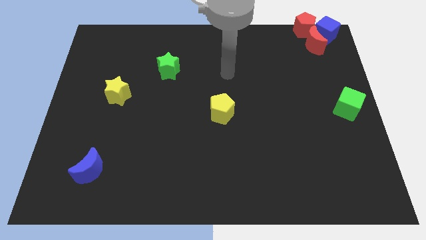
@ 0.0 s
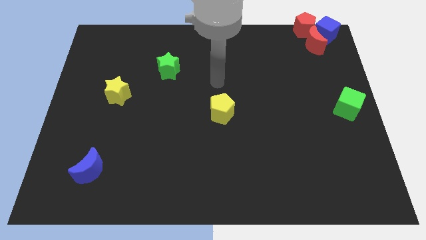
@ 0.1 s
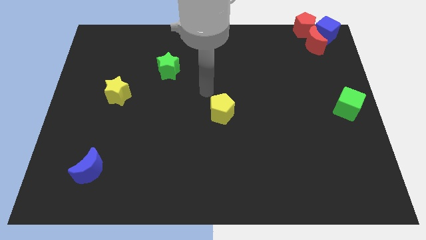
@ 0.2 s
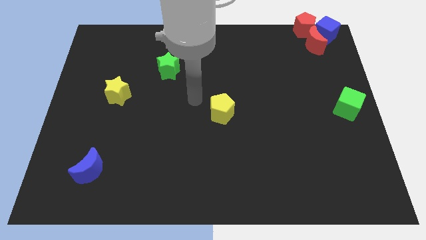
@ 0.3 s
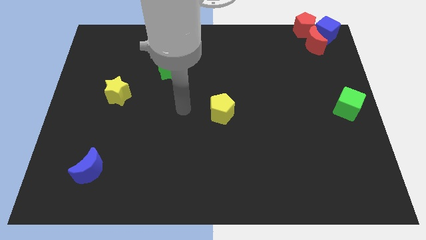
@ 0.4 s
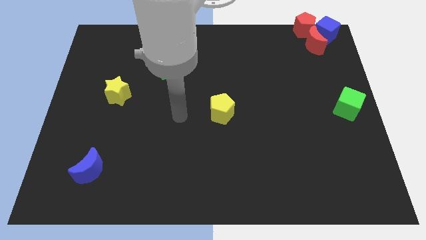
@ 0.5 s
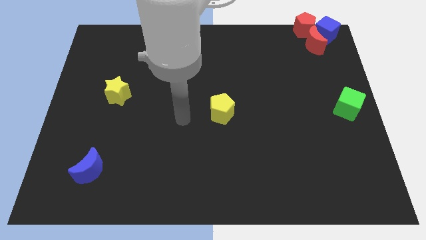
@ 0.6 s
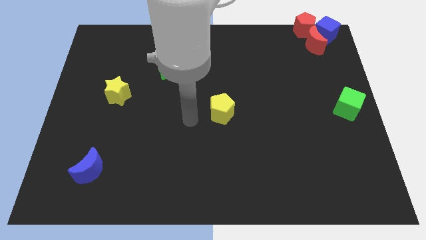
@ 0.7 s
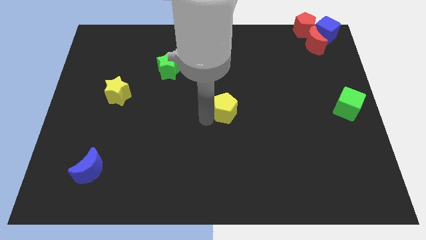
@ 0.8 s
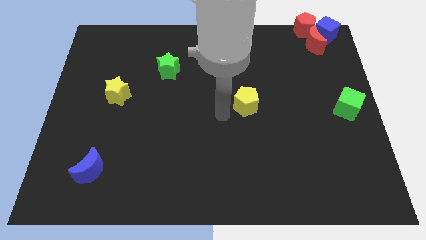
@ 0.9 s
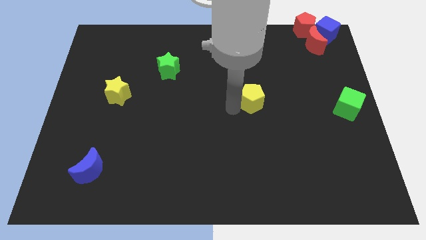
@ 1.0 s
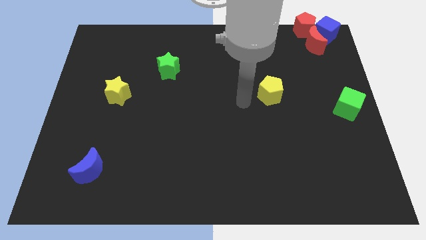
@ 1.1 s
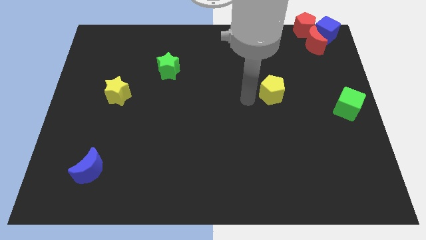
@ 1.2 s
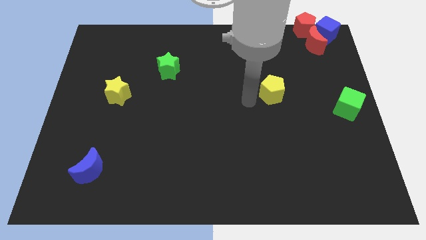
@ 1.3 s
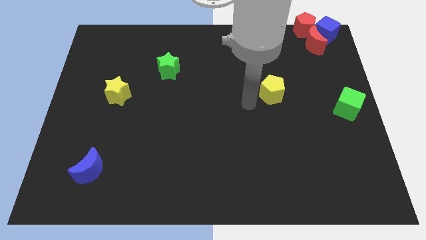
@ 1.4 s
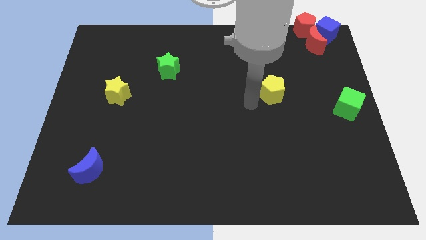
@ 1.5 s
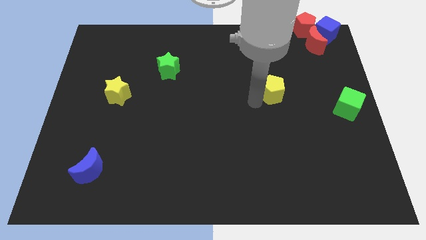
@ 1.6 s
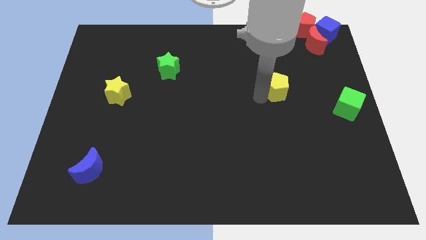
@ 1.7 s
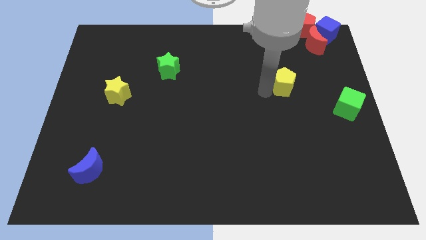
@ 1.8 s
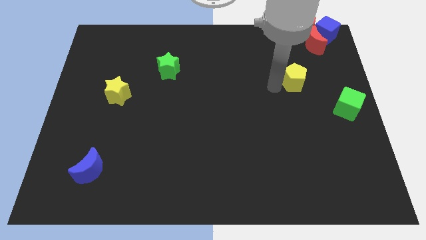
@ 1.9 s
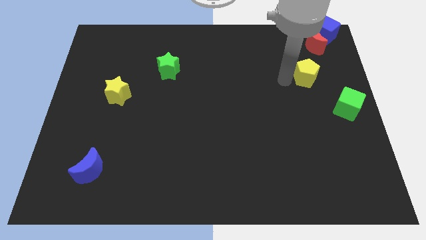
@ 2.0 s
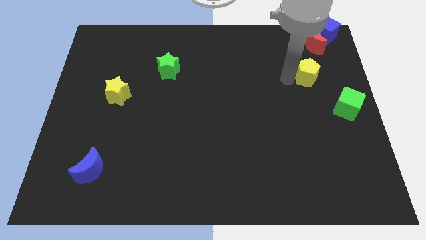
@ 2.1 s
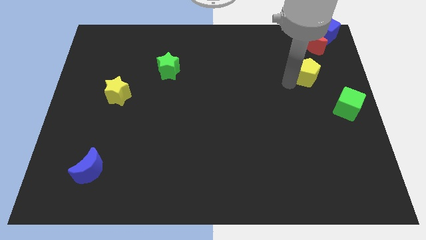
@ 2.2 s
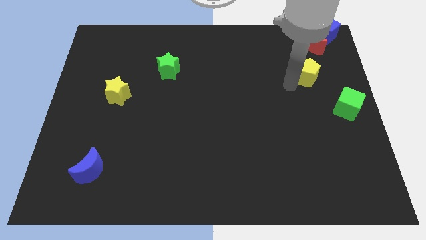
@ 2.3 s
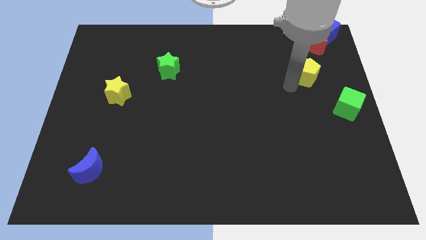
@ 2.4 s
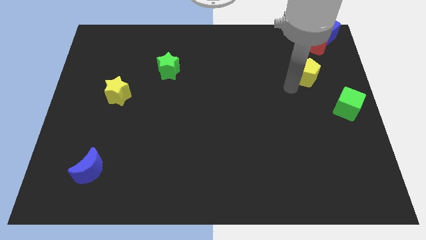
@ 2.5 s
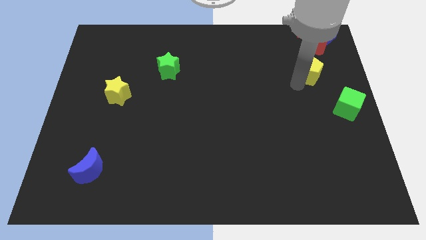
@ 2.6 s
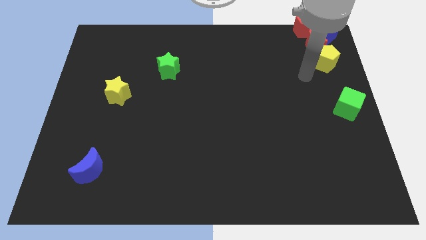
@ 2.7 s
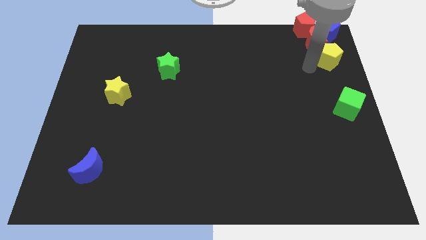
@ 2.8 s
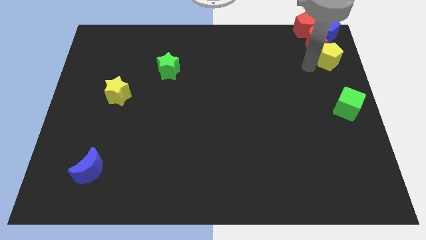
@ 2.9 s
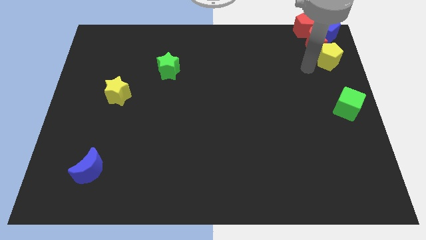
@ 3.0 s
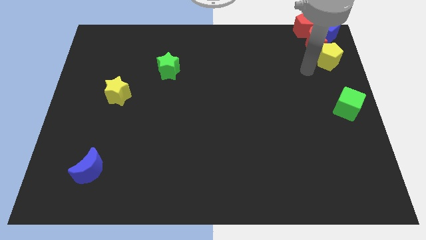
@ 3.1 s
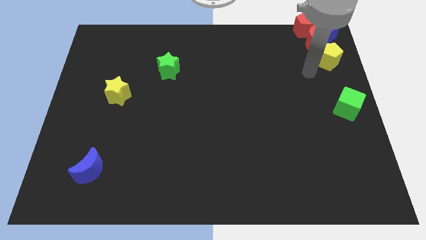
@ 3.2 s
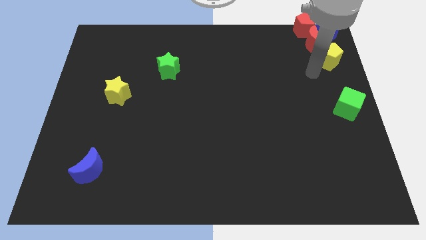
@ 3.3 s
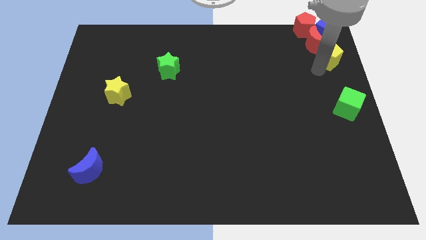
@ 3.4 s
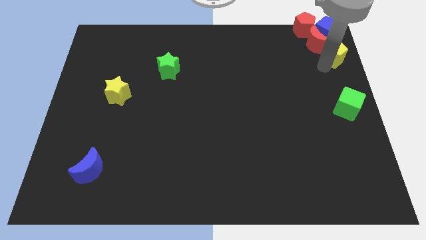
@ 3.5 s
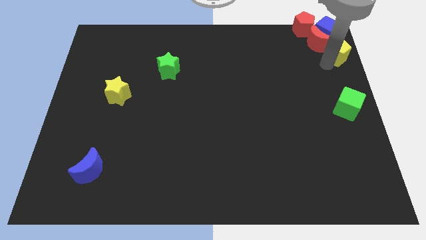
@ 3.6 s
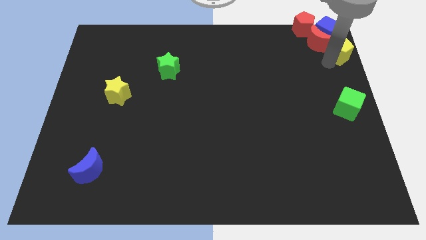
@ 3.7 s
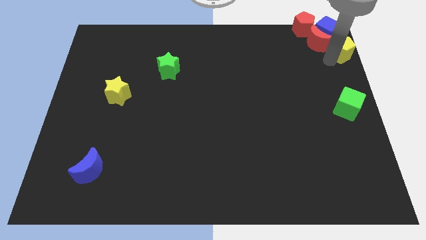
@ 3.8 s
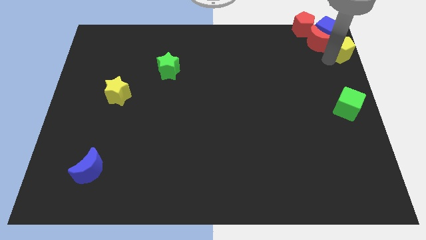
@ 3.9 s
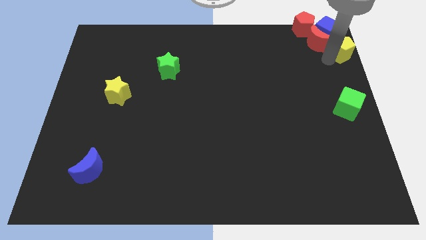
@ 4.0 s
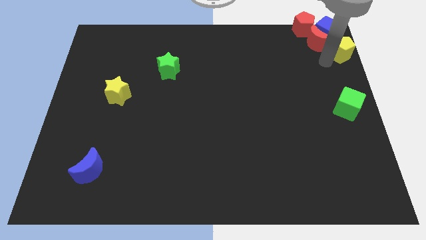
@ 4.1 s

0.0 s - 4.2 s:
move the center yellow pentagon to the top right

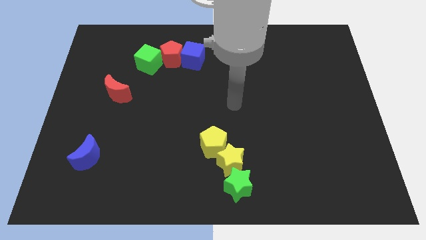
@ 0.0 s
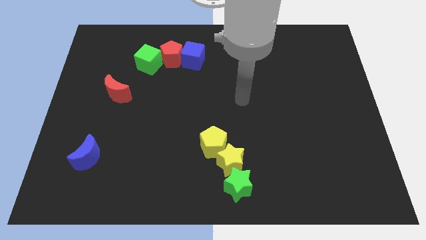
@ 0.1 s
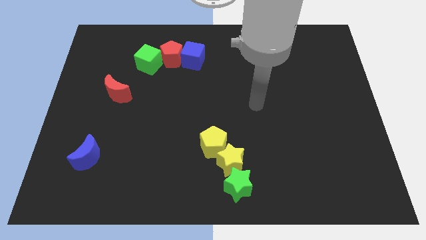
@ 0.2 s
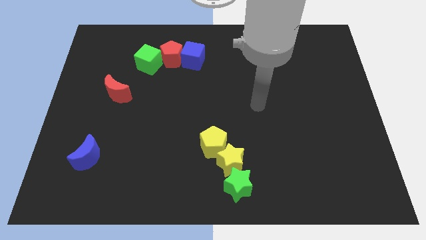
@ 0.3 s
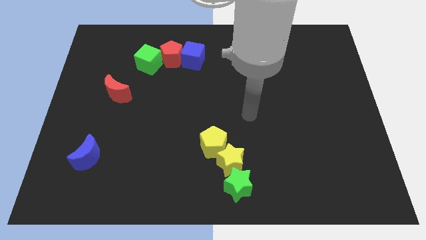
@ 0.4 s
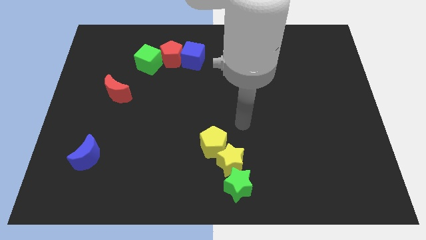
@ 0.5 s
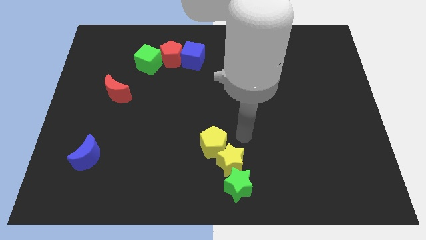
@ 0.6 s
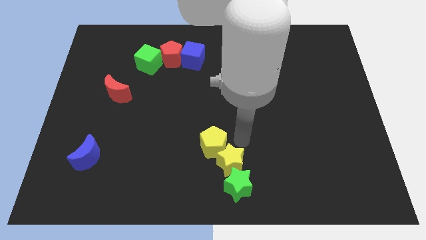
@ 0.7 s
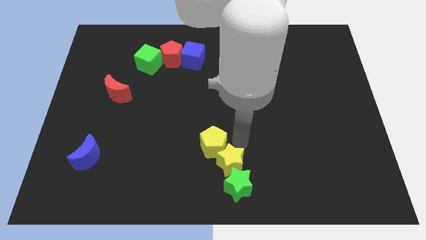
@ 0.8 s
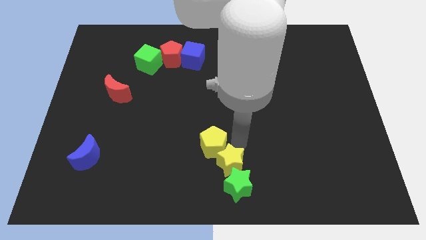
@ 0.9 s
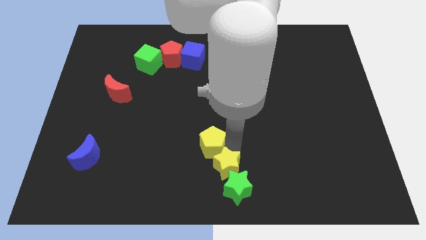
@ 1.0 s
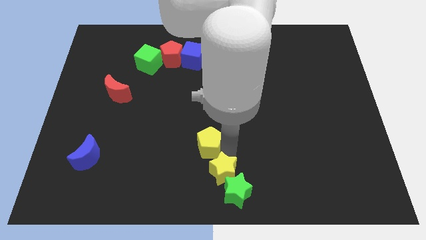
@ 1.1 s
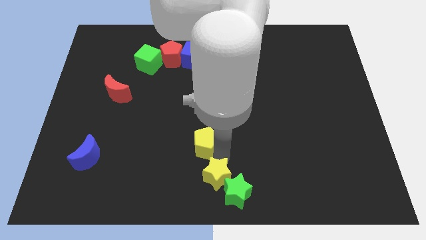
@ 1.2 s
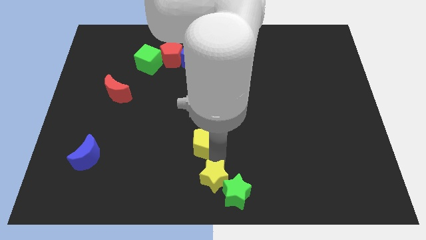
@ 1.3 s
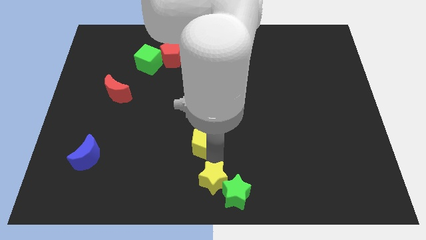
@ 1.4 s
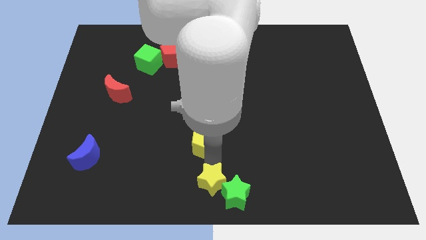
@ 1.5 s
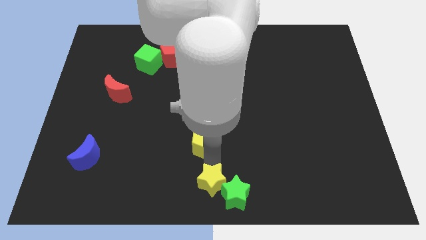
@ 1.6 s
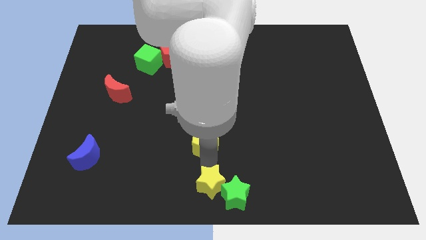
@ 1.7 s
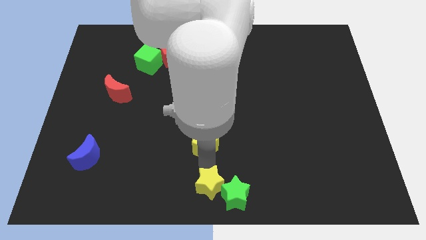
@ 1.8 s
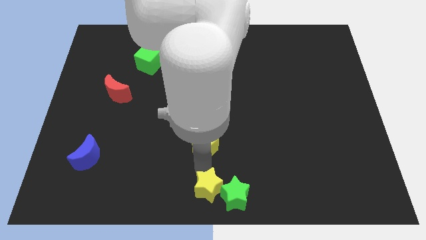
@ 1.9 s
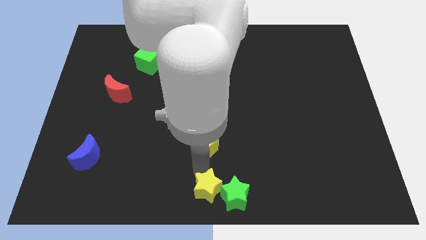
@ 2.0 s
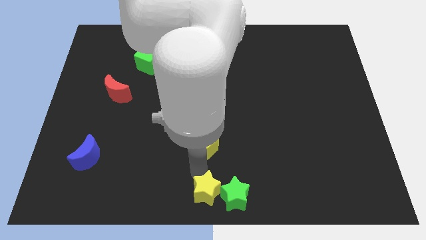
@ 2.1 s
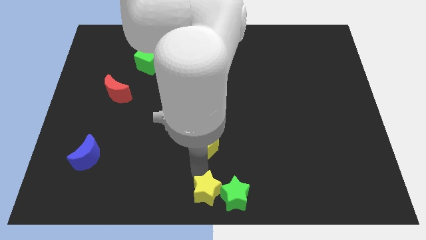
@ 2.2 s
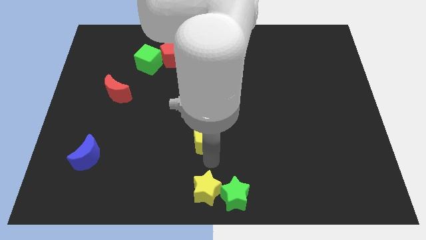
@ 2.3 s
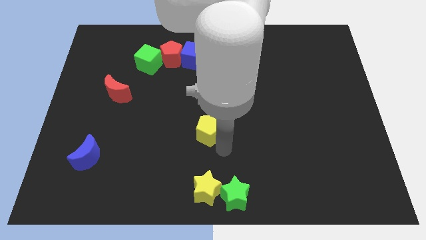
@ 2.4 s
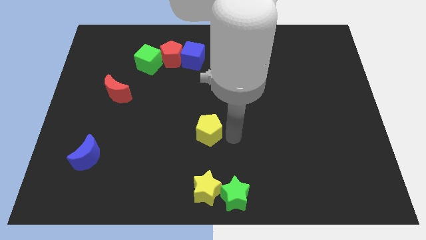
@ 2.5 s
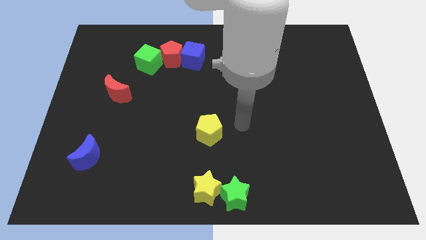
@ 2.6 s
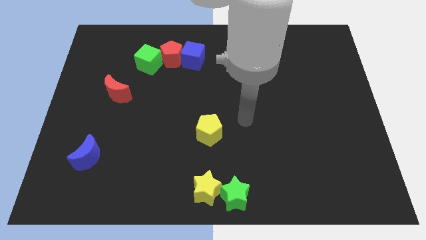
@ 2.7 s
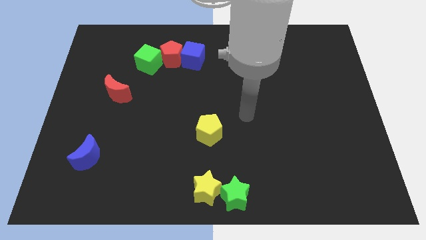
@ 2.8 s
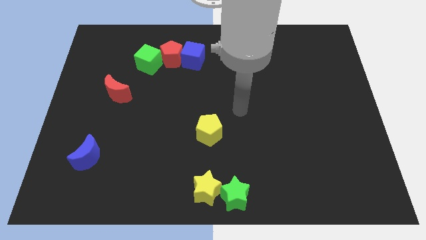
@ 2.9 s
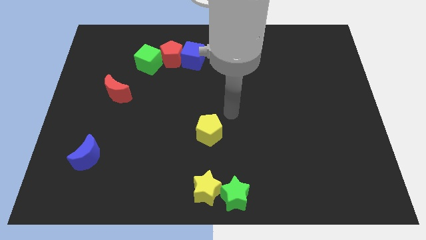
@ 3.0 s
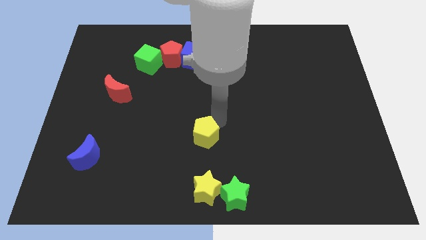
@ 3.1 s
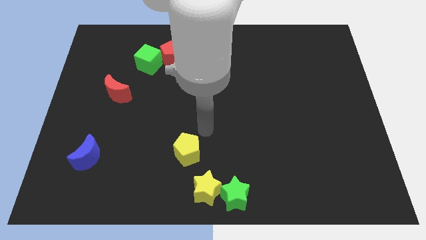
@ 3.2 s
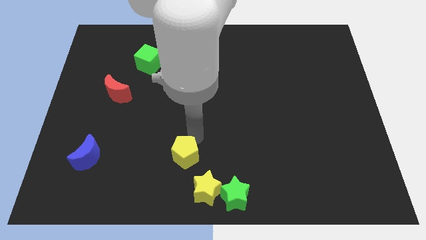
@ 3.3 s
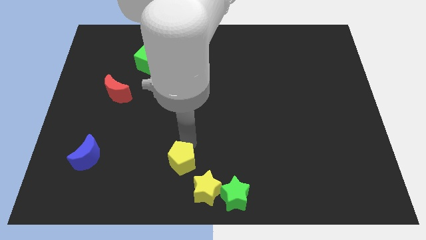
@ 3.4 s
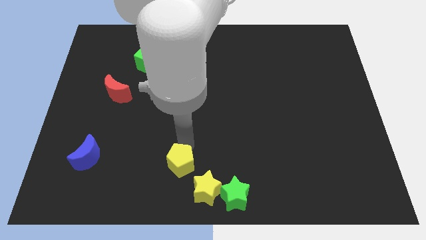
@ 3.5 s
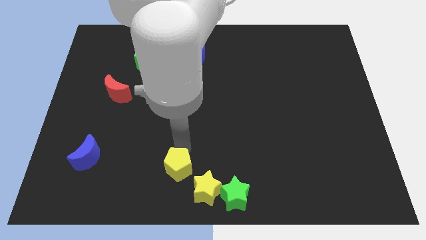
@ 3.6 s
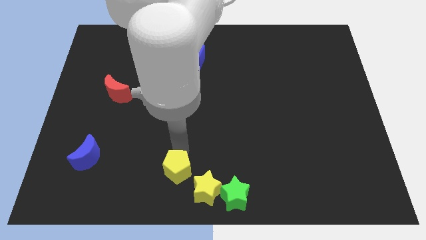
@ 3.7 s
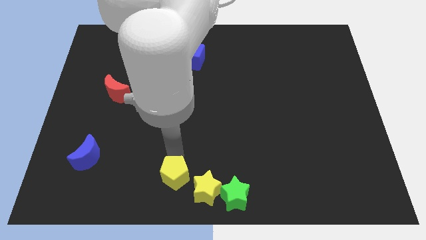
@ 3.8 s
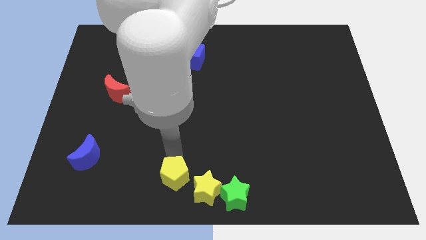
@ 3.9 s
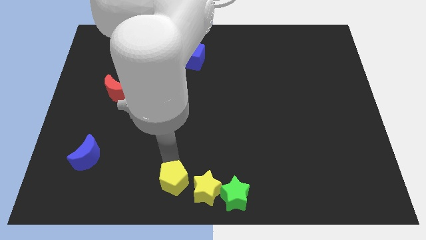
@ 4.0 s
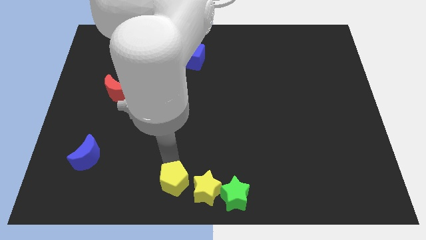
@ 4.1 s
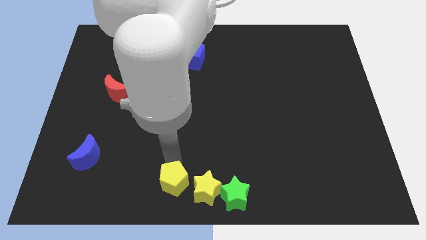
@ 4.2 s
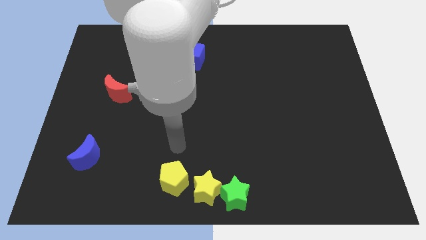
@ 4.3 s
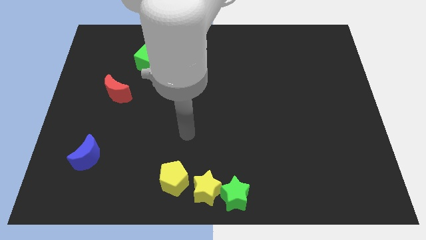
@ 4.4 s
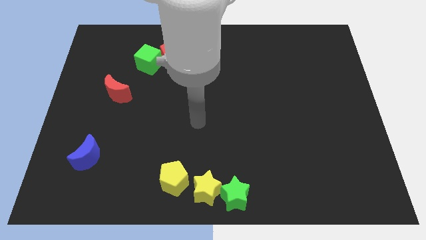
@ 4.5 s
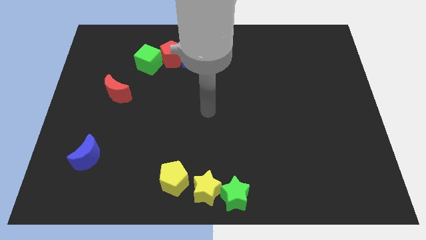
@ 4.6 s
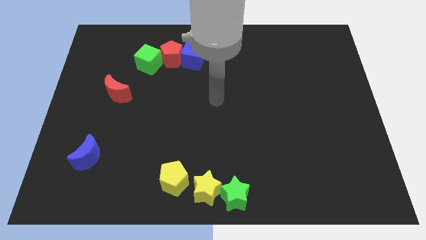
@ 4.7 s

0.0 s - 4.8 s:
place green staryellow star and the yellow pentagon at the bottom center
